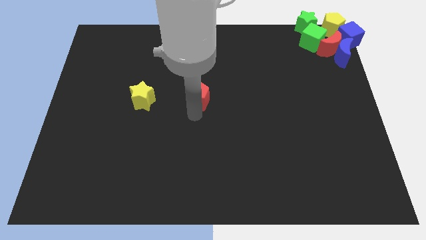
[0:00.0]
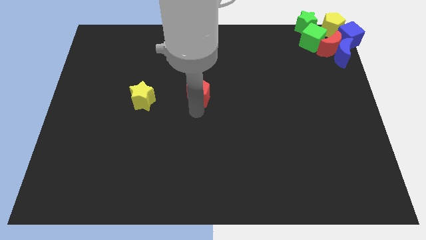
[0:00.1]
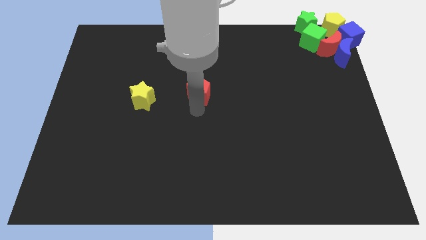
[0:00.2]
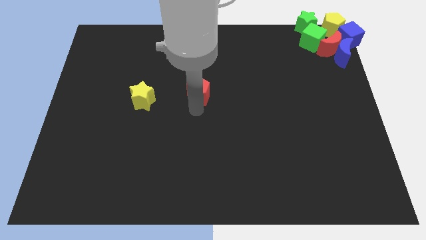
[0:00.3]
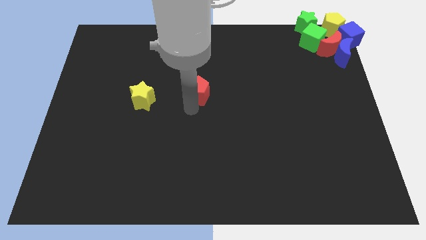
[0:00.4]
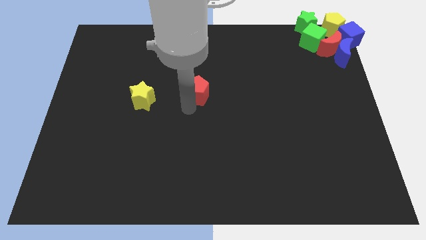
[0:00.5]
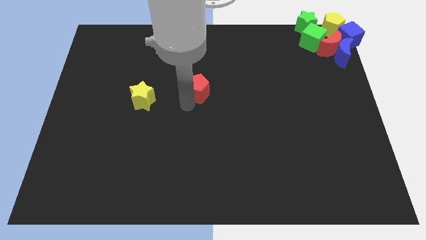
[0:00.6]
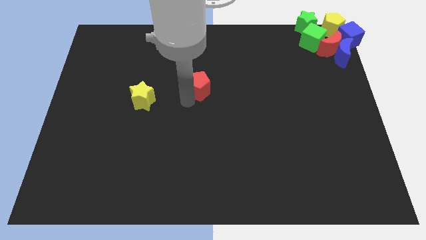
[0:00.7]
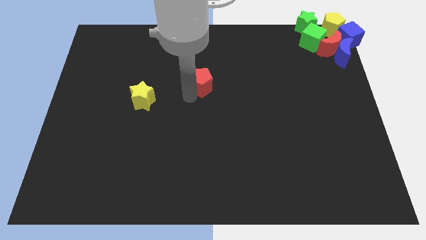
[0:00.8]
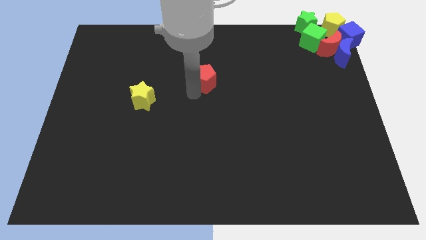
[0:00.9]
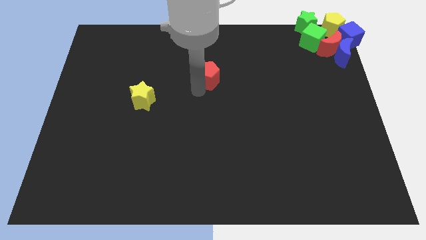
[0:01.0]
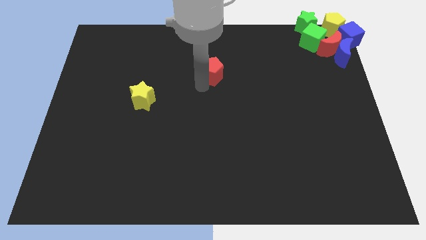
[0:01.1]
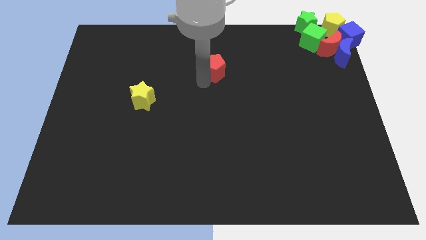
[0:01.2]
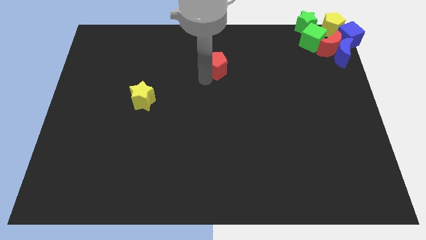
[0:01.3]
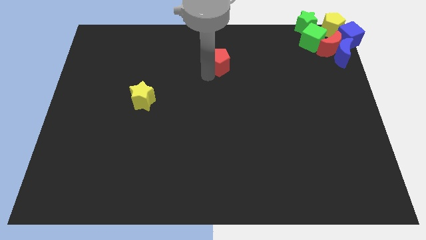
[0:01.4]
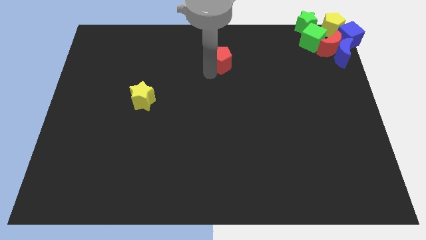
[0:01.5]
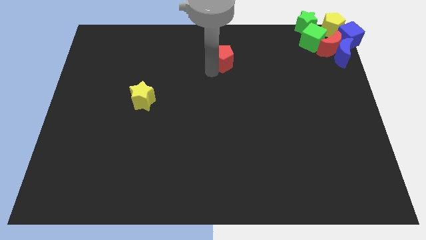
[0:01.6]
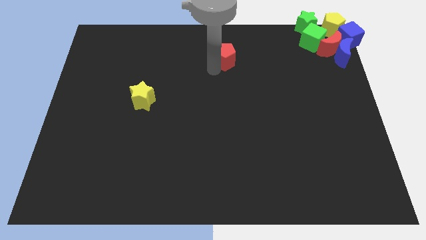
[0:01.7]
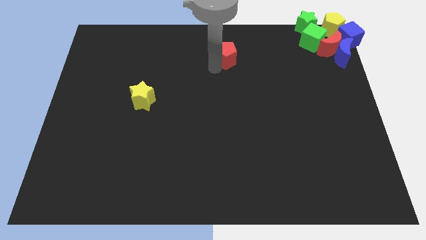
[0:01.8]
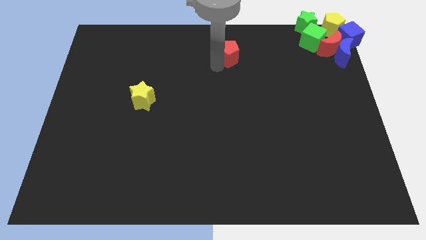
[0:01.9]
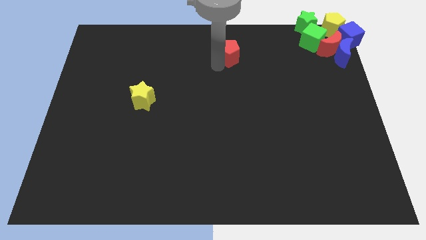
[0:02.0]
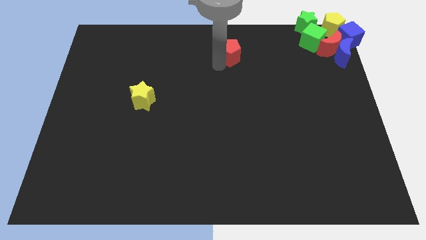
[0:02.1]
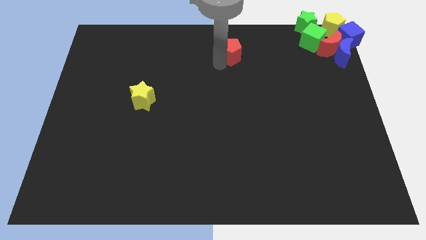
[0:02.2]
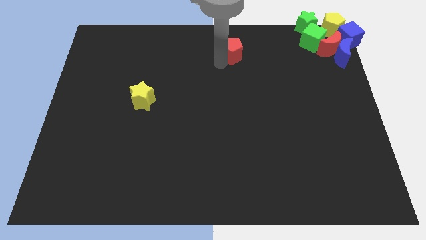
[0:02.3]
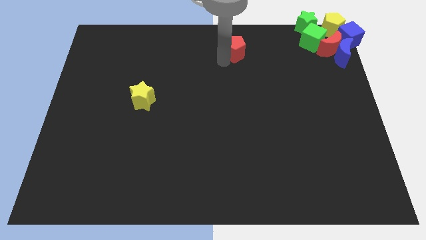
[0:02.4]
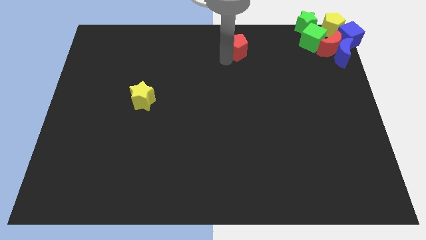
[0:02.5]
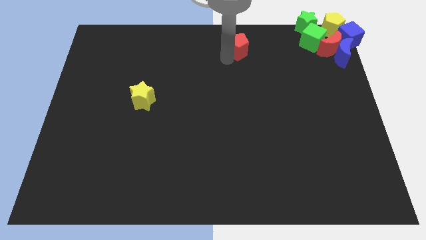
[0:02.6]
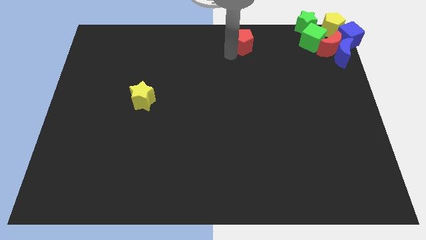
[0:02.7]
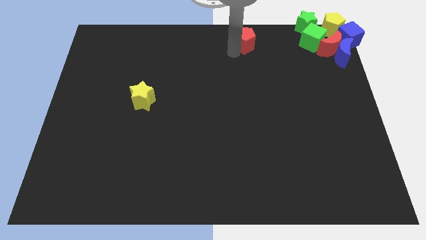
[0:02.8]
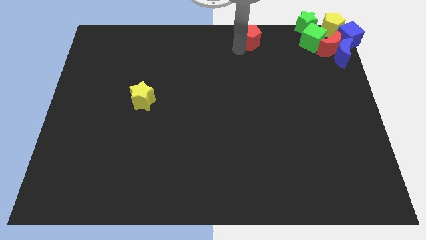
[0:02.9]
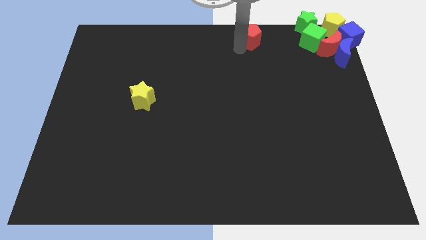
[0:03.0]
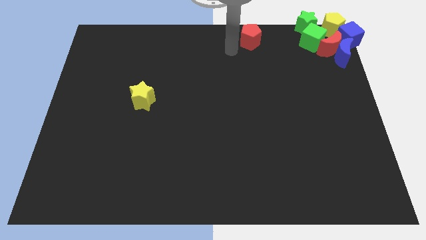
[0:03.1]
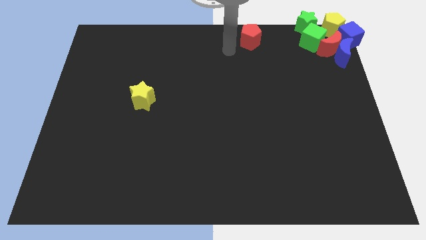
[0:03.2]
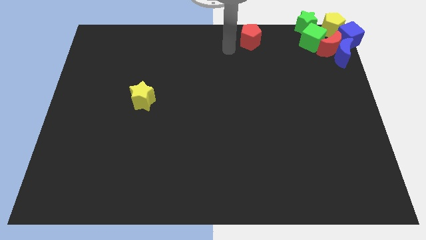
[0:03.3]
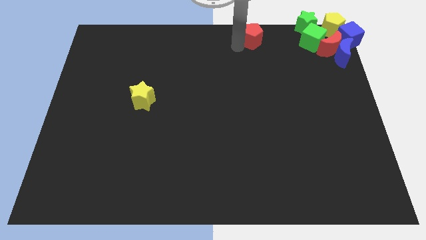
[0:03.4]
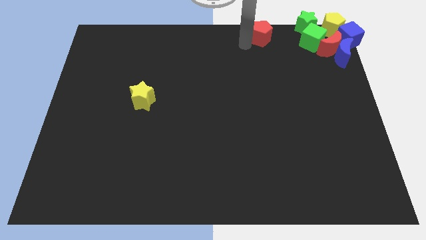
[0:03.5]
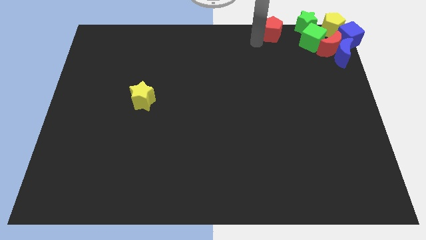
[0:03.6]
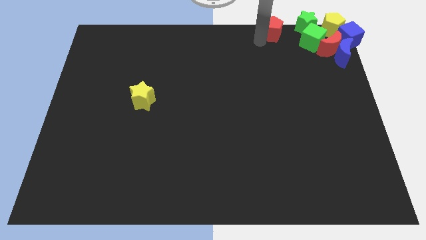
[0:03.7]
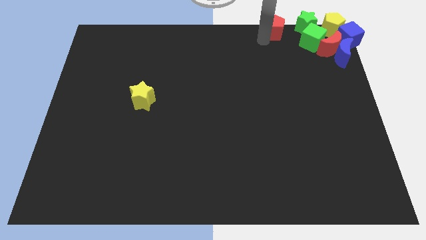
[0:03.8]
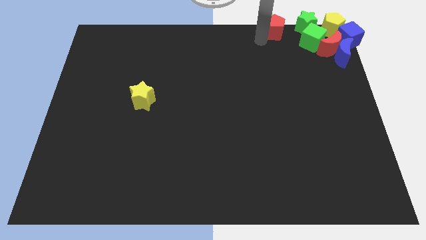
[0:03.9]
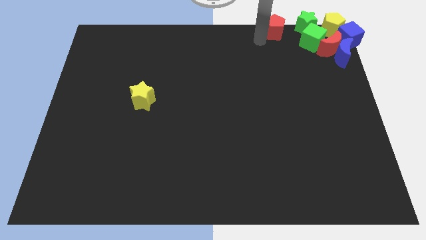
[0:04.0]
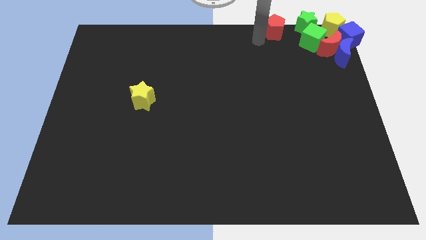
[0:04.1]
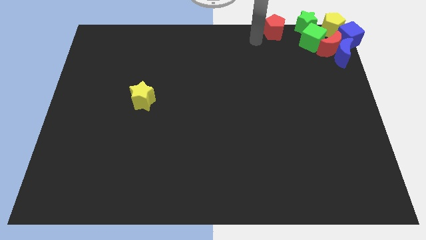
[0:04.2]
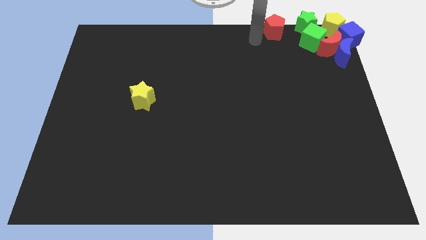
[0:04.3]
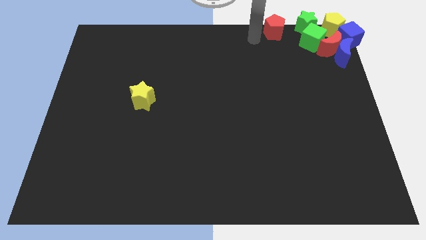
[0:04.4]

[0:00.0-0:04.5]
move the red pentagon to the bottom left side of the green star

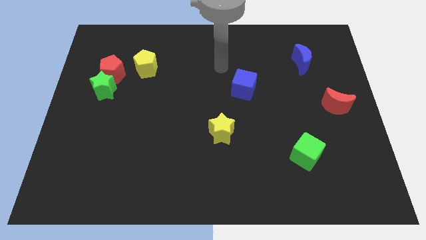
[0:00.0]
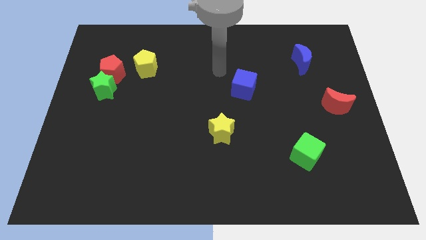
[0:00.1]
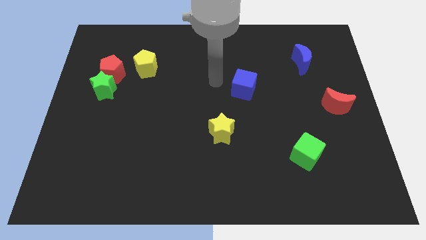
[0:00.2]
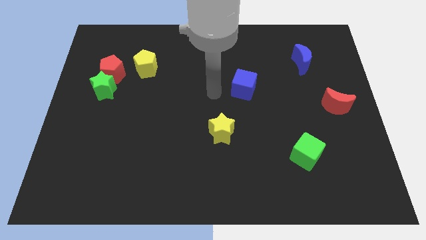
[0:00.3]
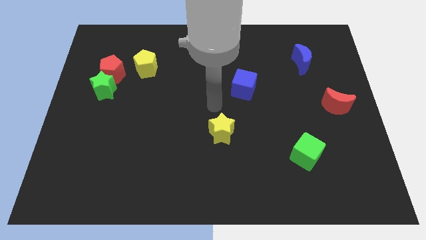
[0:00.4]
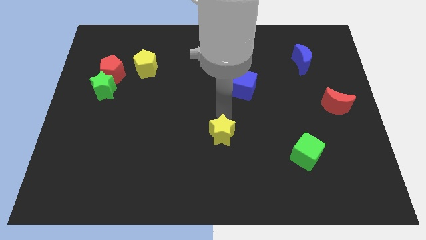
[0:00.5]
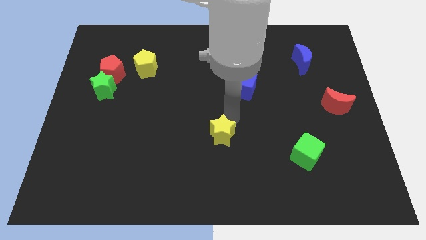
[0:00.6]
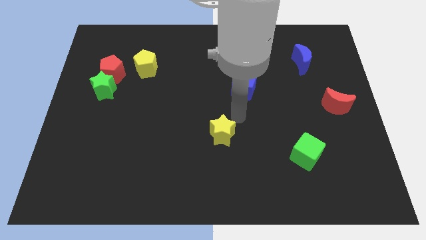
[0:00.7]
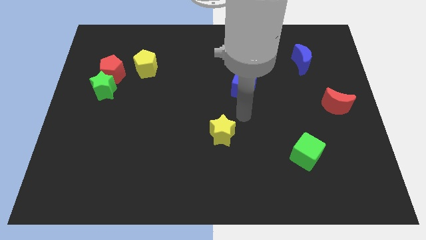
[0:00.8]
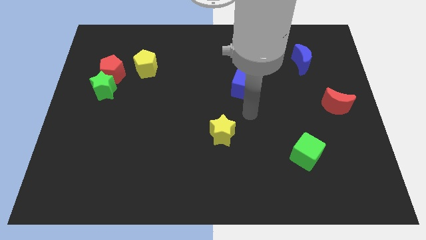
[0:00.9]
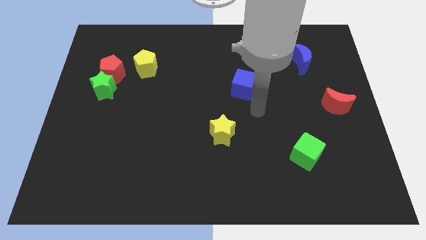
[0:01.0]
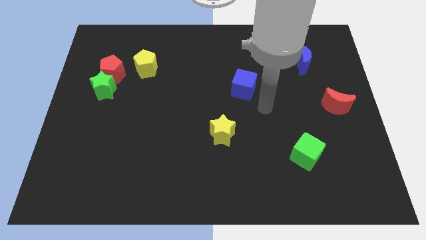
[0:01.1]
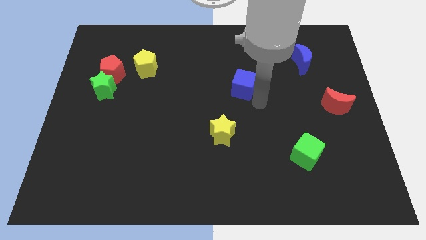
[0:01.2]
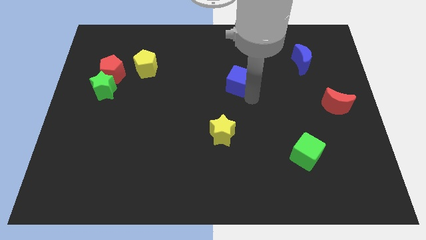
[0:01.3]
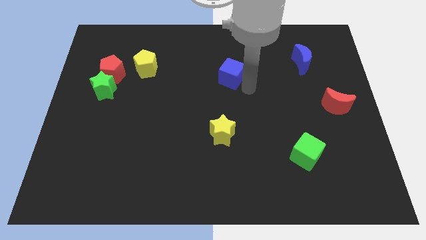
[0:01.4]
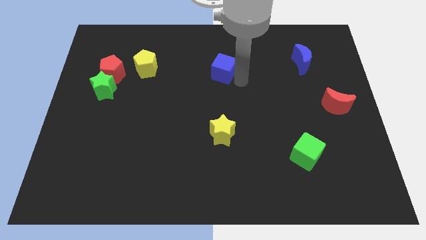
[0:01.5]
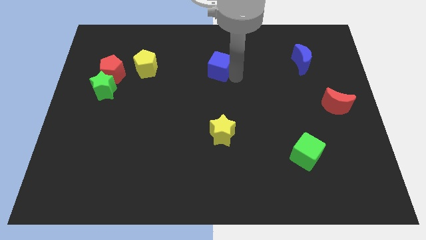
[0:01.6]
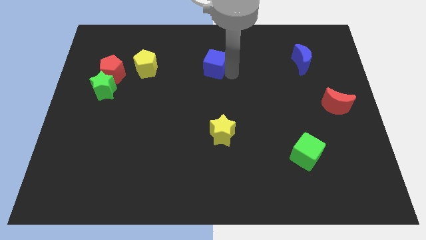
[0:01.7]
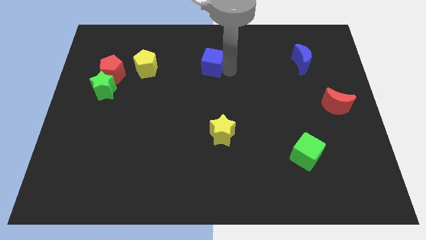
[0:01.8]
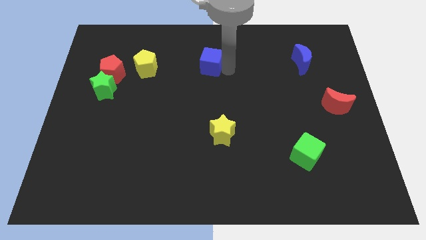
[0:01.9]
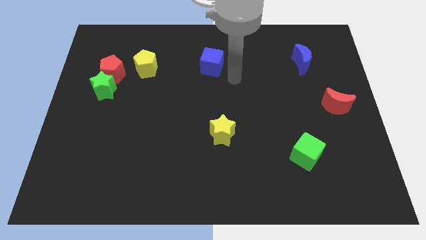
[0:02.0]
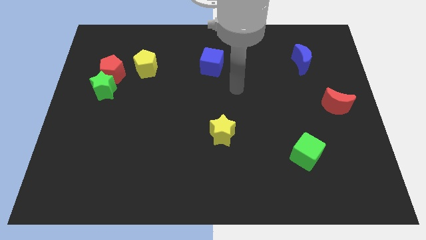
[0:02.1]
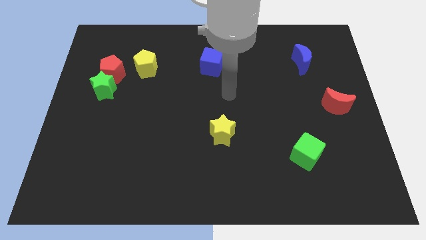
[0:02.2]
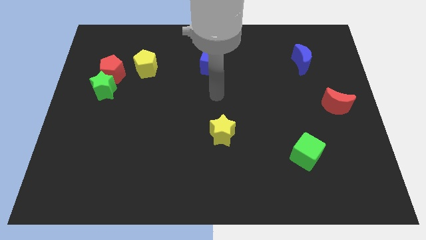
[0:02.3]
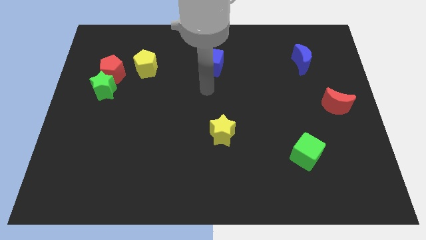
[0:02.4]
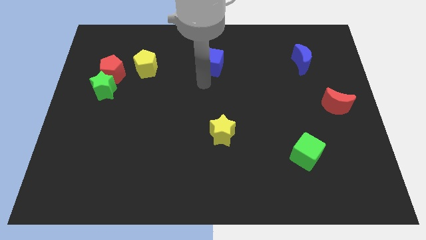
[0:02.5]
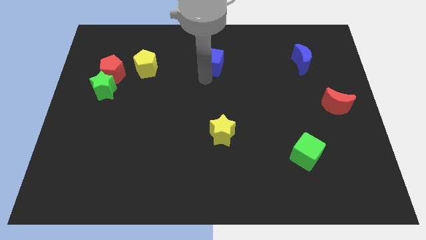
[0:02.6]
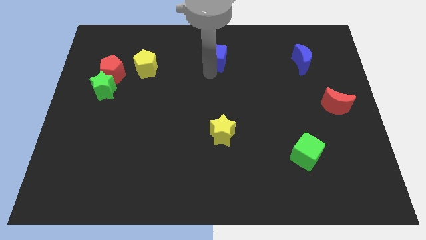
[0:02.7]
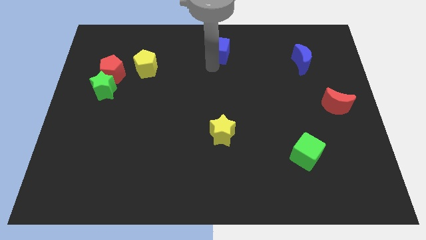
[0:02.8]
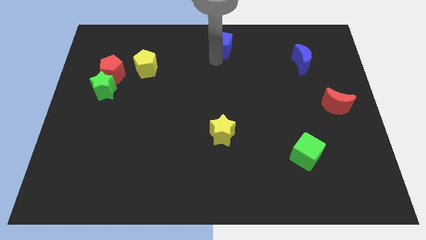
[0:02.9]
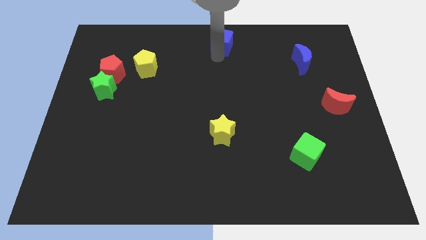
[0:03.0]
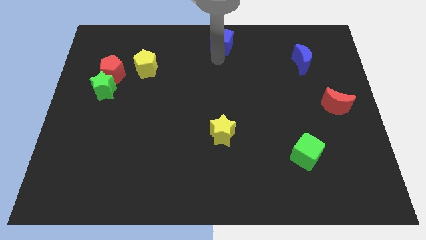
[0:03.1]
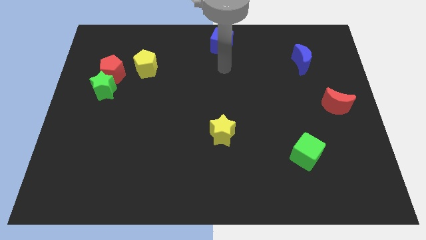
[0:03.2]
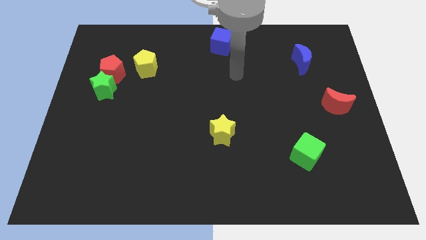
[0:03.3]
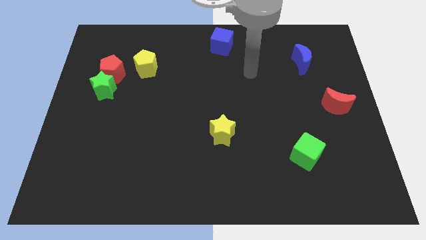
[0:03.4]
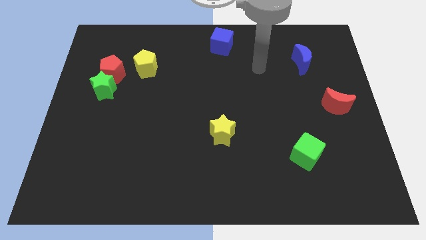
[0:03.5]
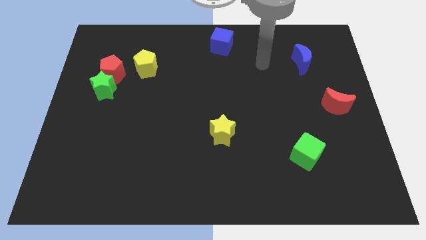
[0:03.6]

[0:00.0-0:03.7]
slide the blue cube to the top center of the board

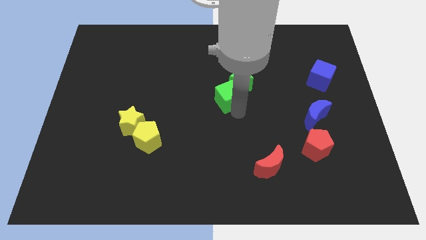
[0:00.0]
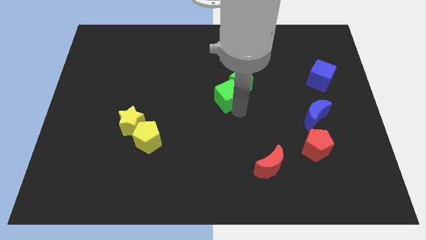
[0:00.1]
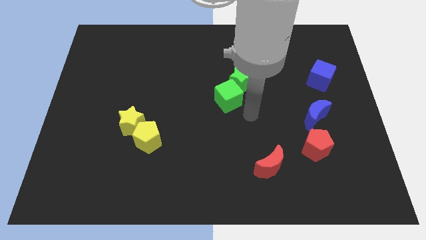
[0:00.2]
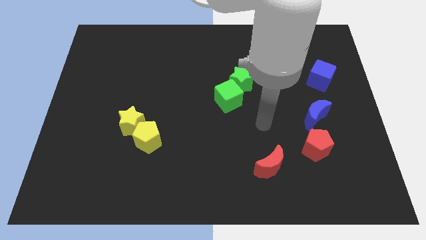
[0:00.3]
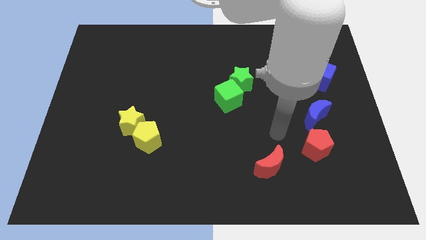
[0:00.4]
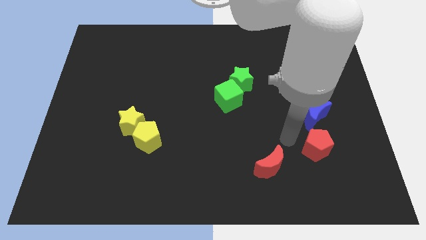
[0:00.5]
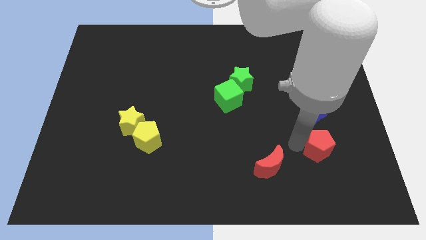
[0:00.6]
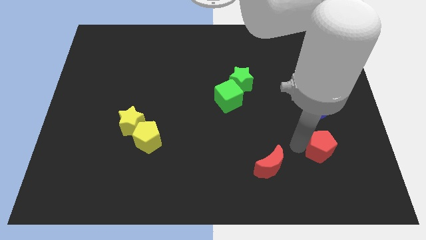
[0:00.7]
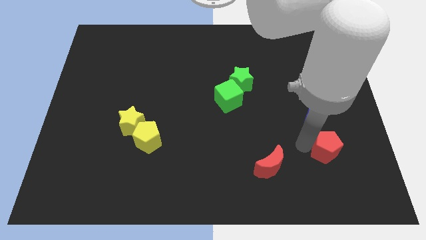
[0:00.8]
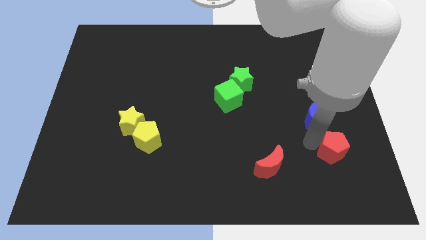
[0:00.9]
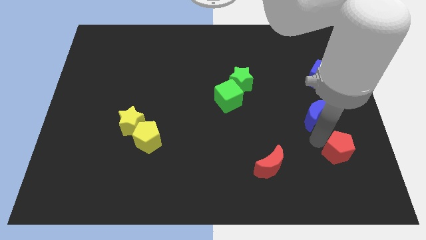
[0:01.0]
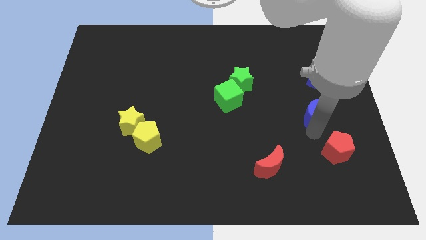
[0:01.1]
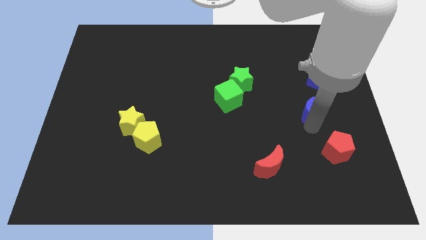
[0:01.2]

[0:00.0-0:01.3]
move the red pentagon slightly to the right
